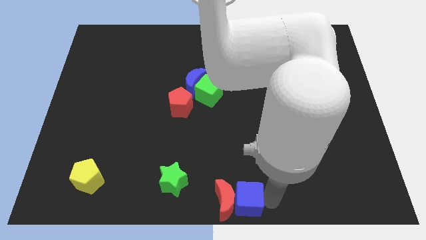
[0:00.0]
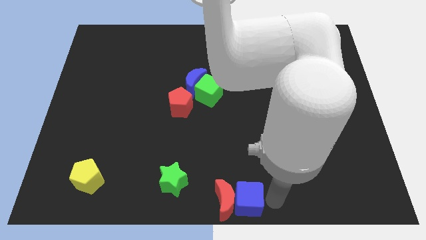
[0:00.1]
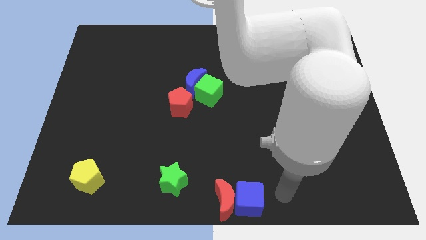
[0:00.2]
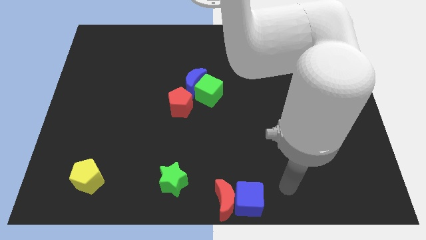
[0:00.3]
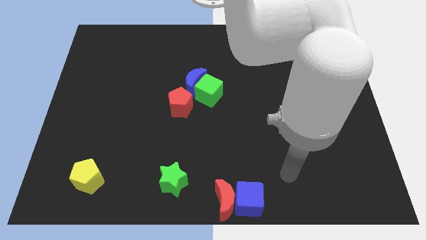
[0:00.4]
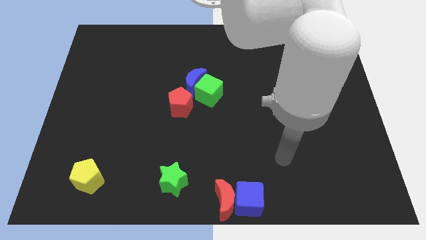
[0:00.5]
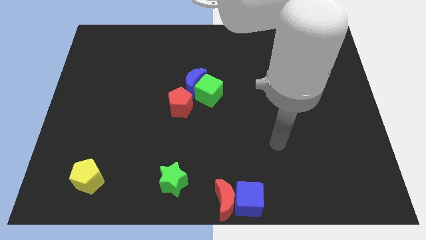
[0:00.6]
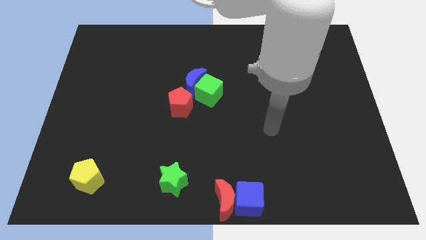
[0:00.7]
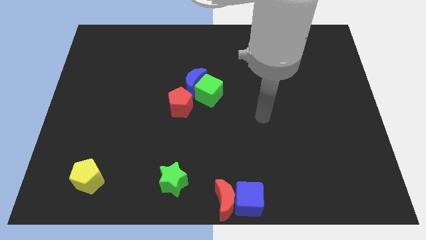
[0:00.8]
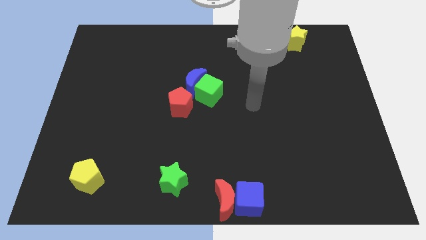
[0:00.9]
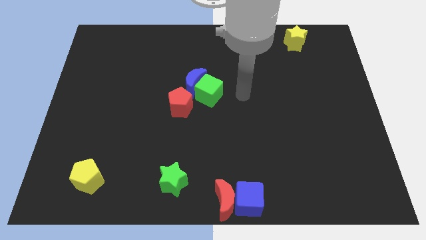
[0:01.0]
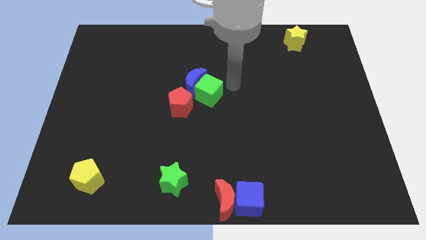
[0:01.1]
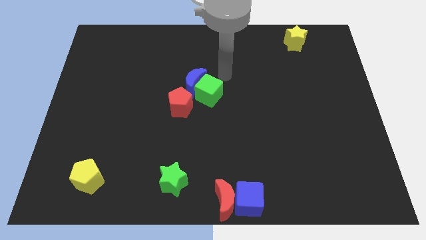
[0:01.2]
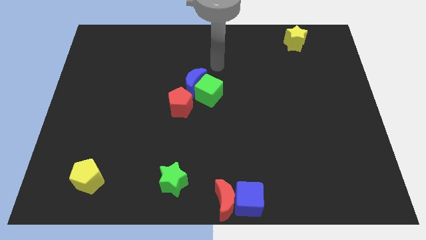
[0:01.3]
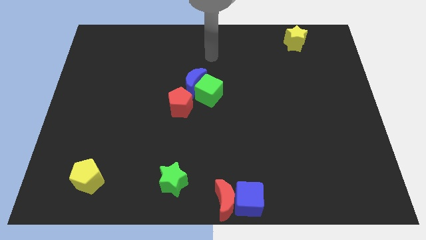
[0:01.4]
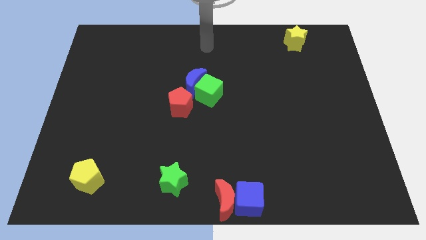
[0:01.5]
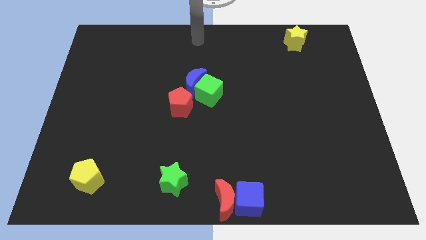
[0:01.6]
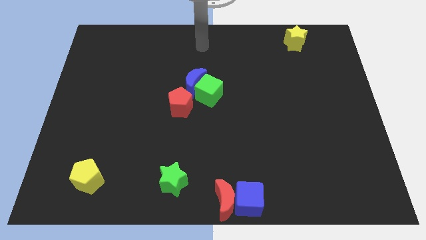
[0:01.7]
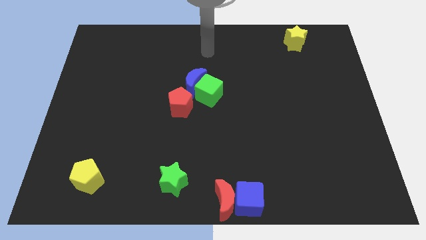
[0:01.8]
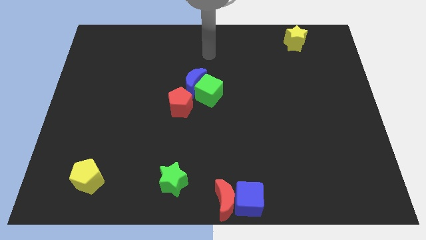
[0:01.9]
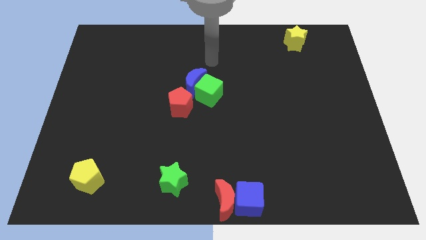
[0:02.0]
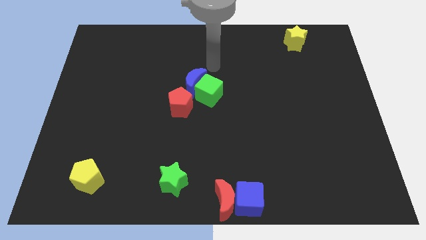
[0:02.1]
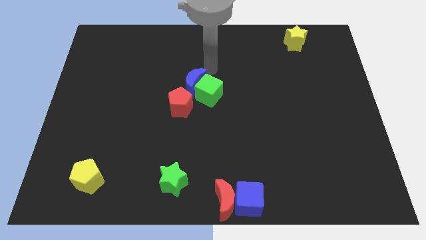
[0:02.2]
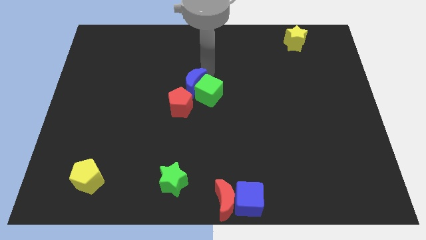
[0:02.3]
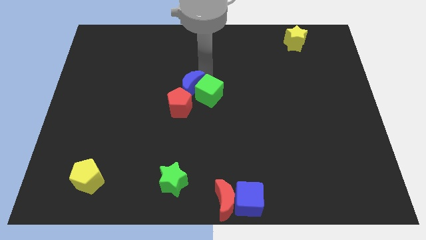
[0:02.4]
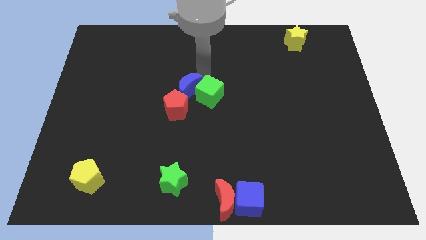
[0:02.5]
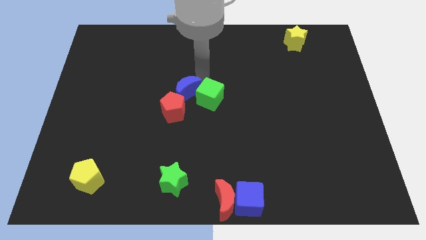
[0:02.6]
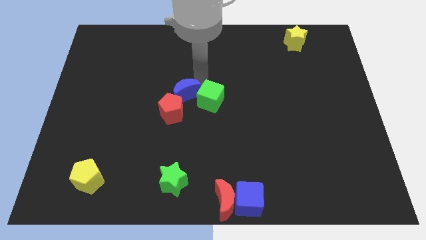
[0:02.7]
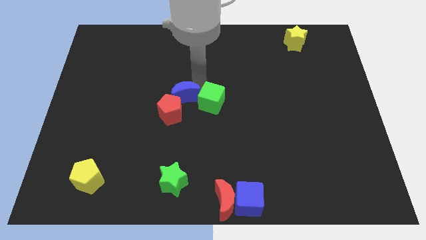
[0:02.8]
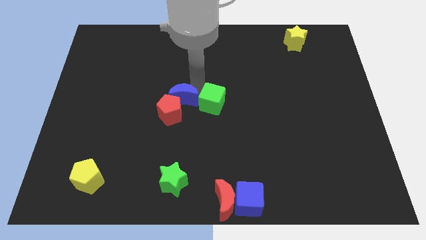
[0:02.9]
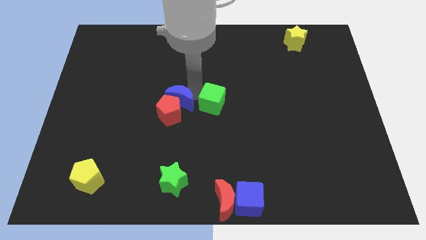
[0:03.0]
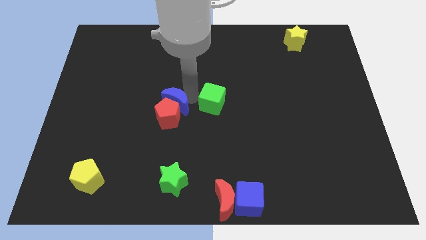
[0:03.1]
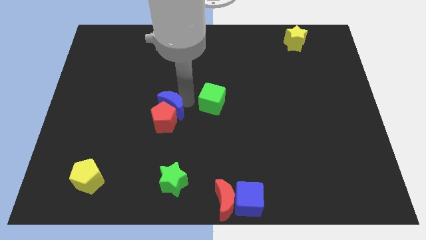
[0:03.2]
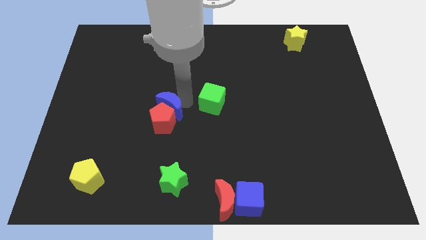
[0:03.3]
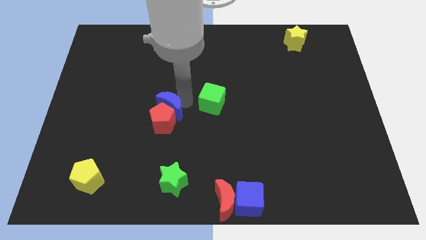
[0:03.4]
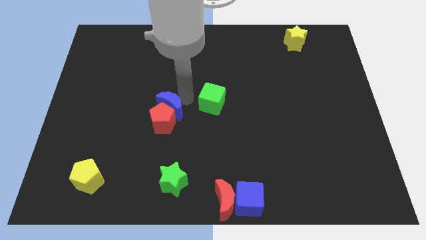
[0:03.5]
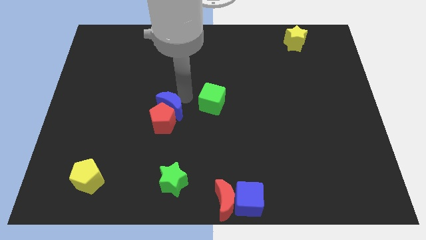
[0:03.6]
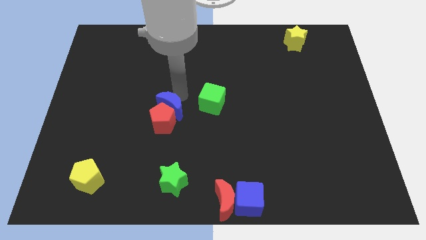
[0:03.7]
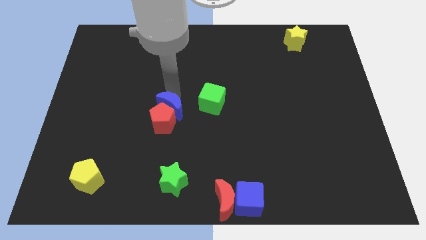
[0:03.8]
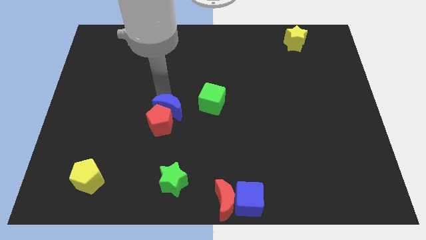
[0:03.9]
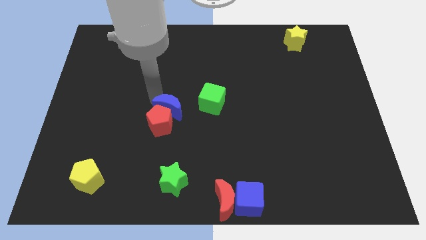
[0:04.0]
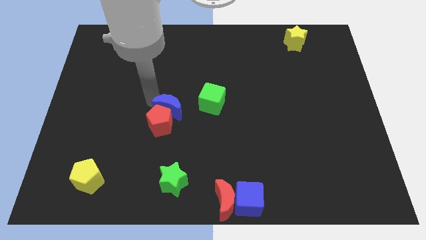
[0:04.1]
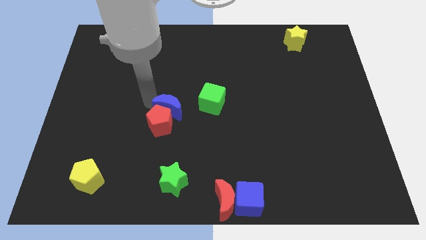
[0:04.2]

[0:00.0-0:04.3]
separate the blue crescent and red pentagon from the green cube

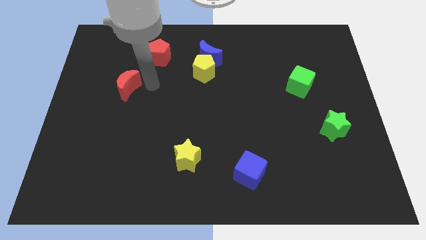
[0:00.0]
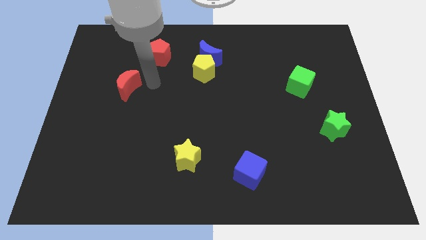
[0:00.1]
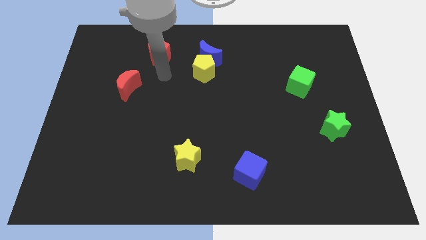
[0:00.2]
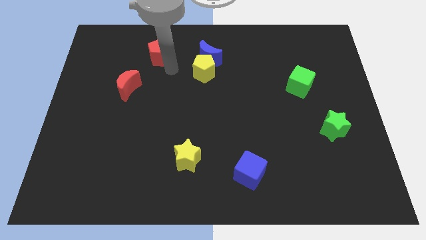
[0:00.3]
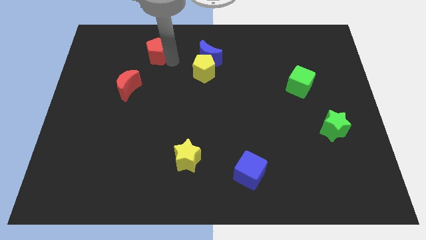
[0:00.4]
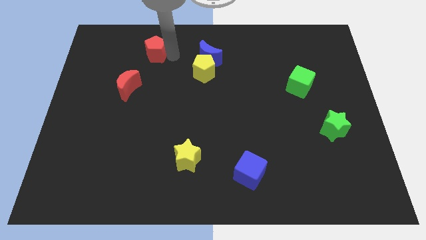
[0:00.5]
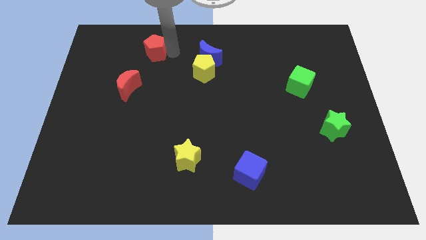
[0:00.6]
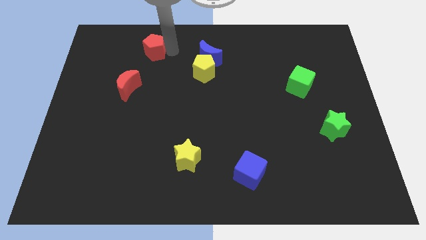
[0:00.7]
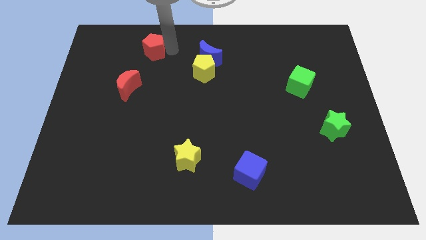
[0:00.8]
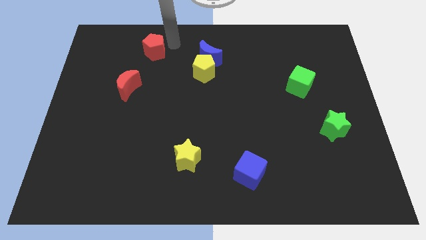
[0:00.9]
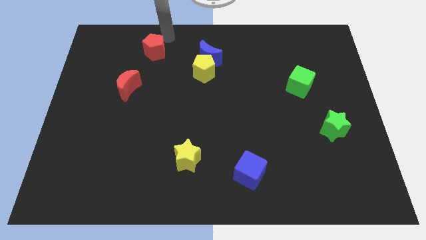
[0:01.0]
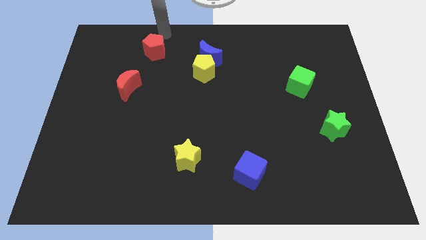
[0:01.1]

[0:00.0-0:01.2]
slightly push the red pentagon towards the top side of the board

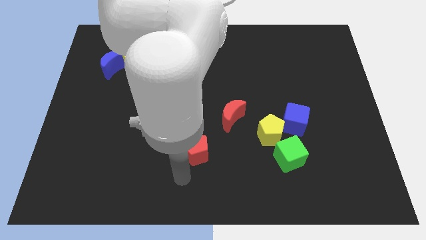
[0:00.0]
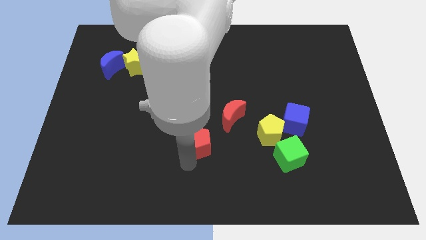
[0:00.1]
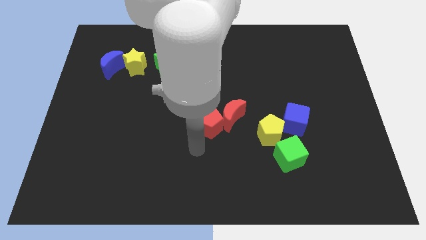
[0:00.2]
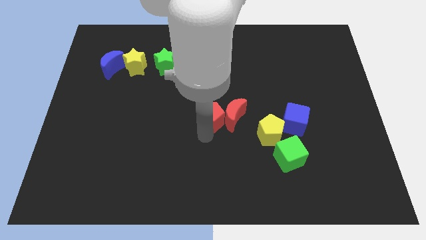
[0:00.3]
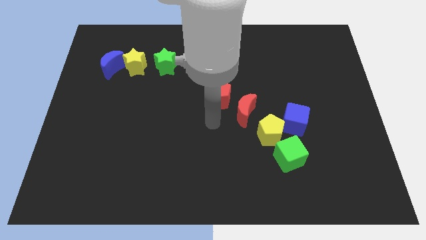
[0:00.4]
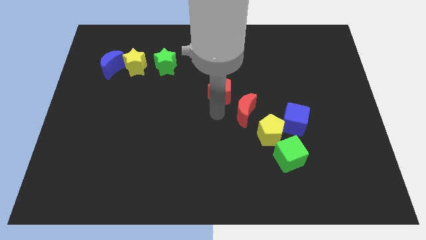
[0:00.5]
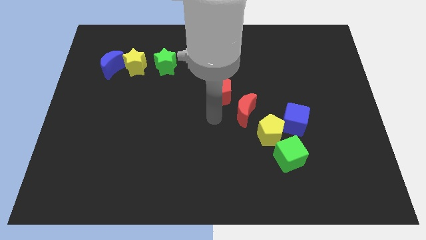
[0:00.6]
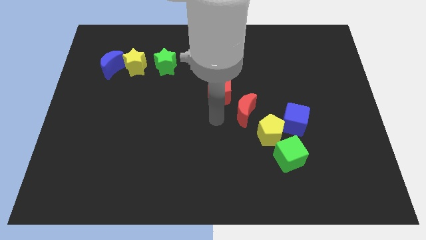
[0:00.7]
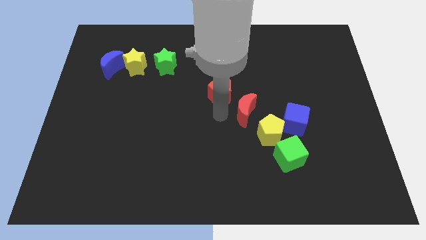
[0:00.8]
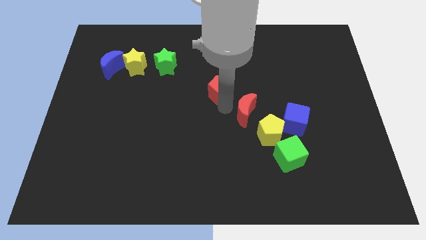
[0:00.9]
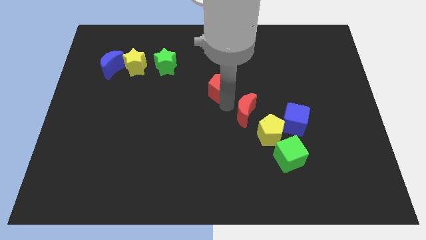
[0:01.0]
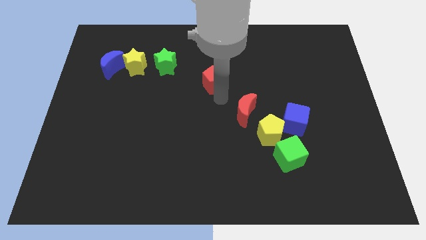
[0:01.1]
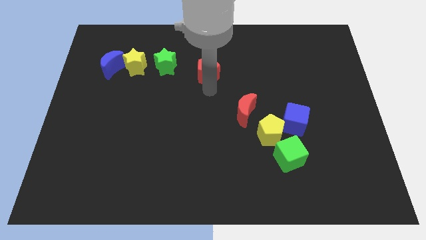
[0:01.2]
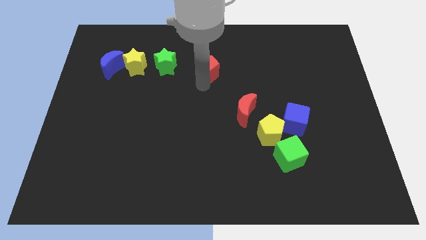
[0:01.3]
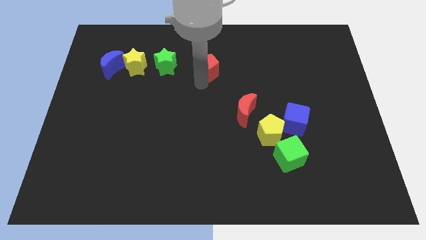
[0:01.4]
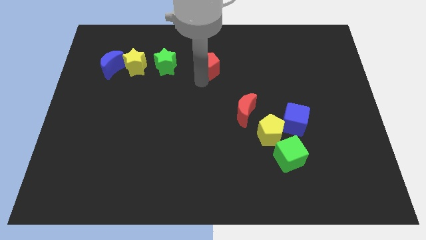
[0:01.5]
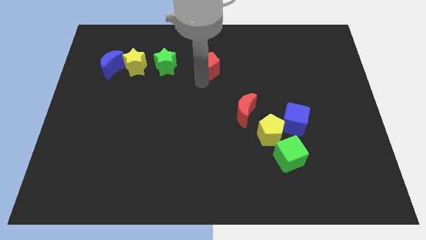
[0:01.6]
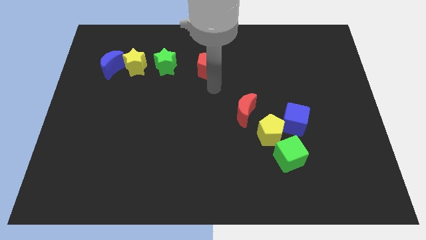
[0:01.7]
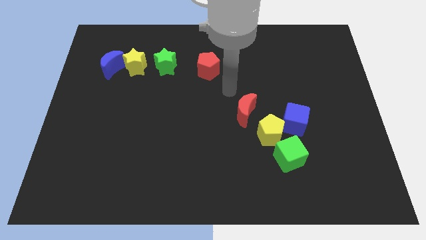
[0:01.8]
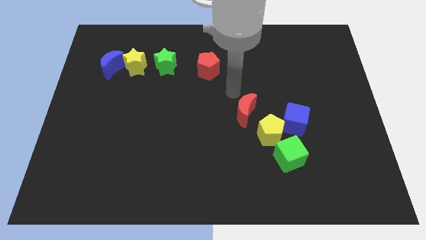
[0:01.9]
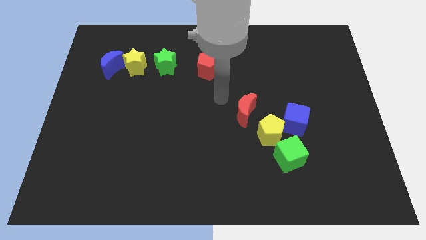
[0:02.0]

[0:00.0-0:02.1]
move the red pentagon to the right side of the green star

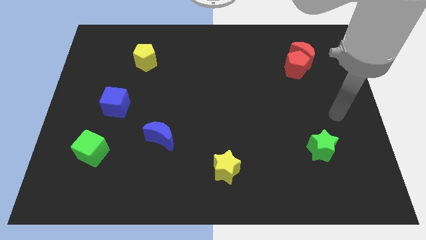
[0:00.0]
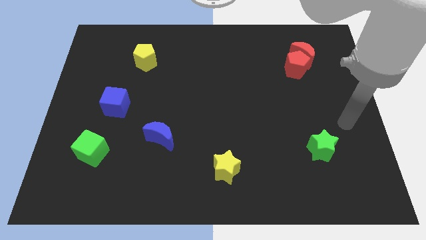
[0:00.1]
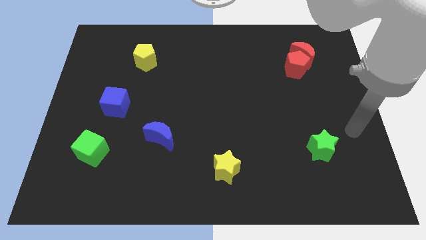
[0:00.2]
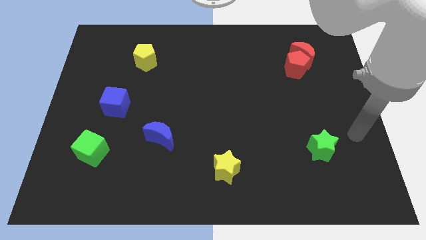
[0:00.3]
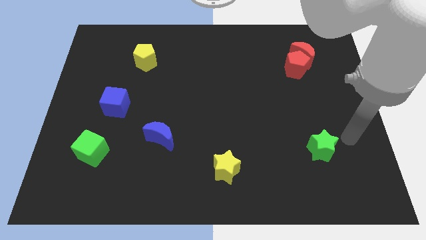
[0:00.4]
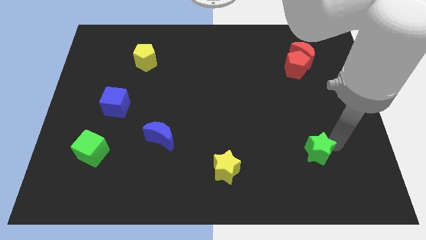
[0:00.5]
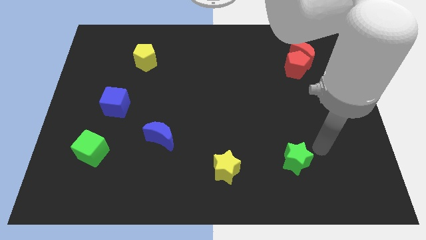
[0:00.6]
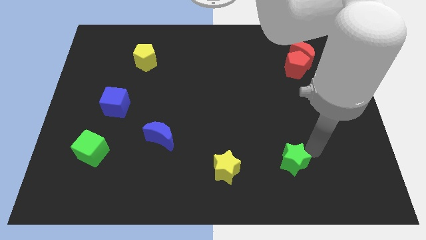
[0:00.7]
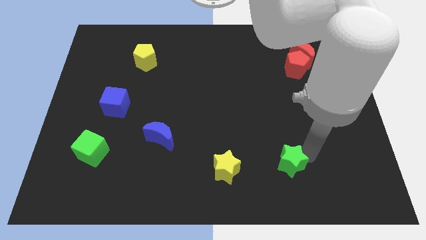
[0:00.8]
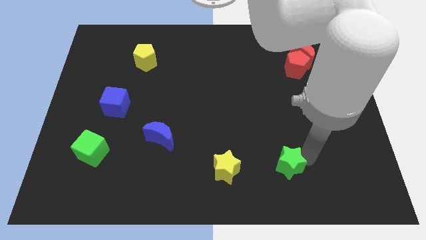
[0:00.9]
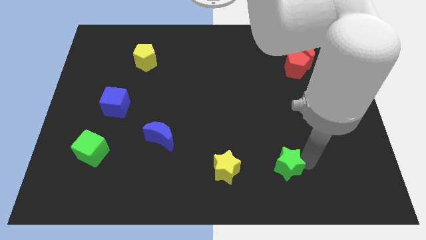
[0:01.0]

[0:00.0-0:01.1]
move green star diagonally left

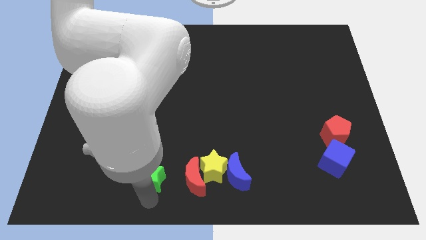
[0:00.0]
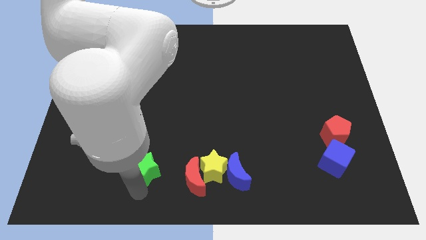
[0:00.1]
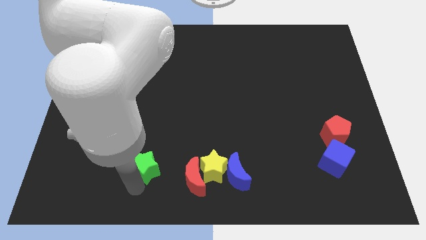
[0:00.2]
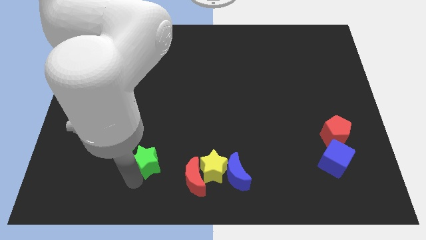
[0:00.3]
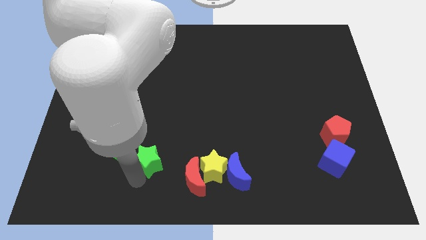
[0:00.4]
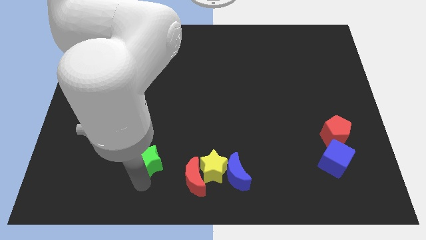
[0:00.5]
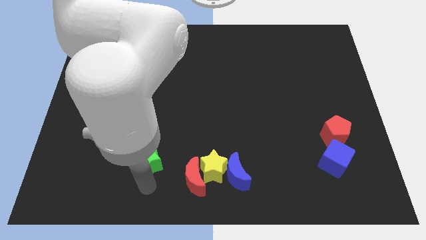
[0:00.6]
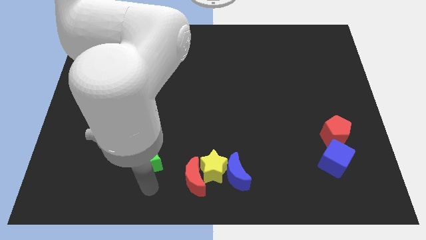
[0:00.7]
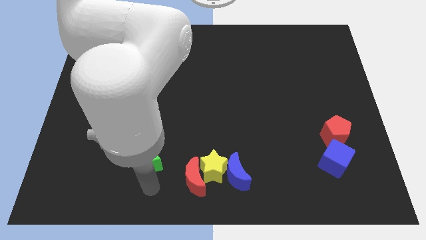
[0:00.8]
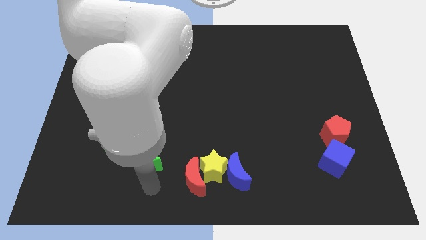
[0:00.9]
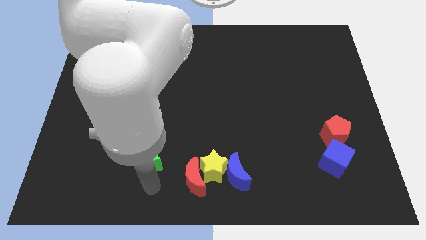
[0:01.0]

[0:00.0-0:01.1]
slightly move the green star towards the top side of the board
